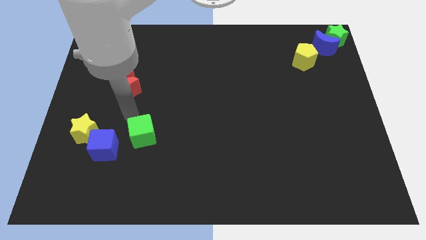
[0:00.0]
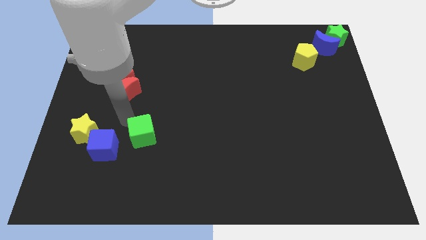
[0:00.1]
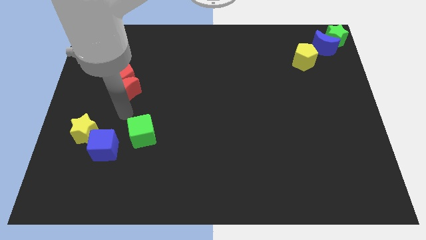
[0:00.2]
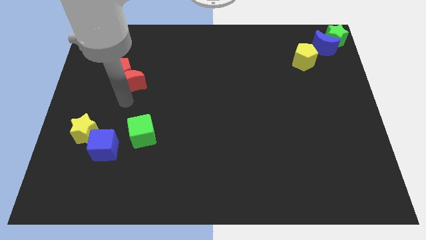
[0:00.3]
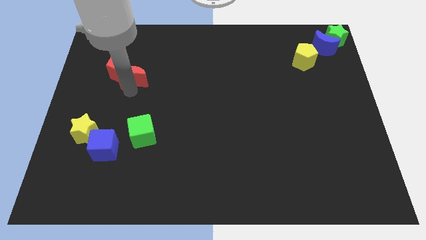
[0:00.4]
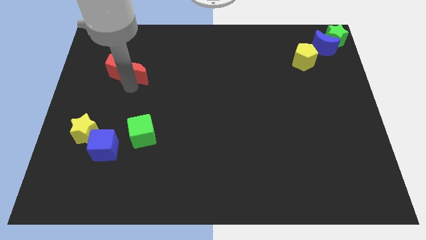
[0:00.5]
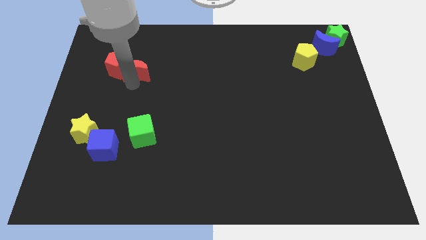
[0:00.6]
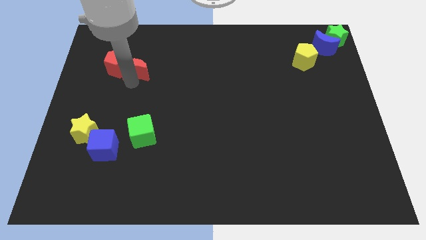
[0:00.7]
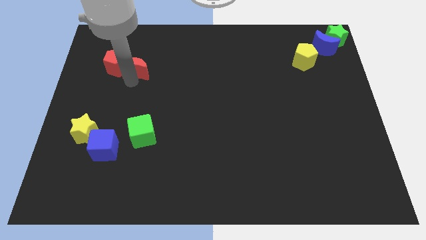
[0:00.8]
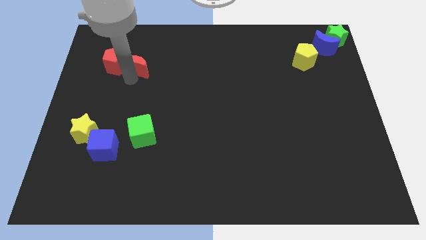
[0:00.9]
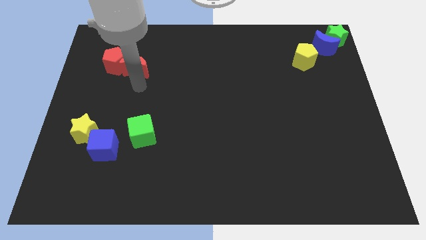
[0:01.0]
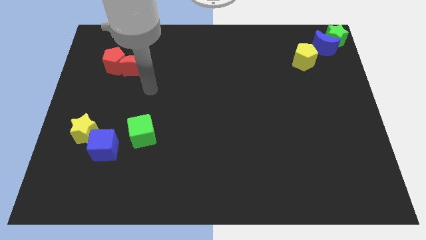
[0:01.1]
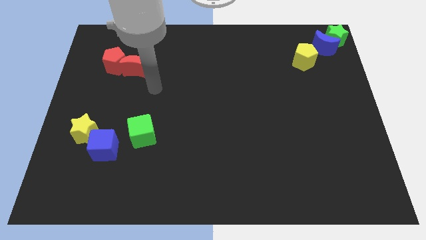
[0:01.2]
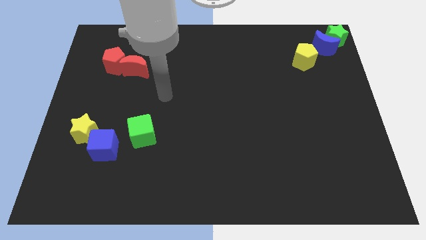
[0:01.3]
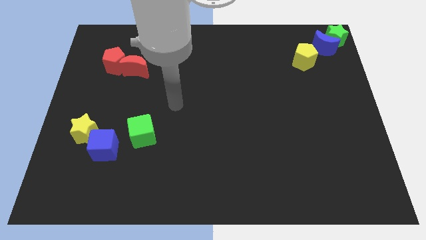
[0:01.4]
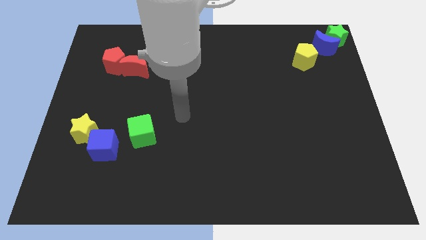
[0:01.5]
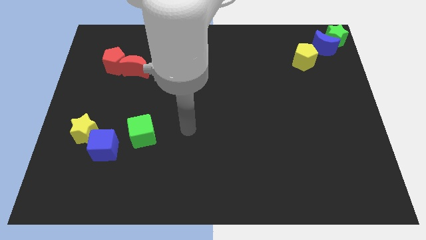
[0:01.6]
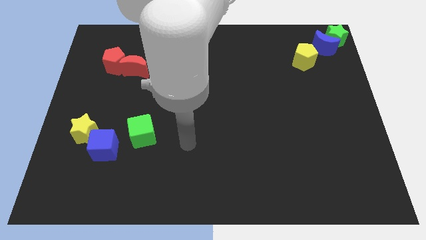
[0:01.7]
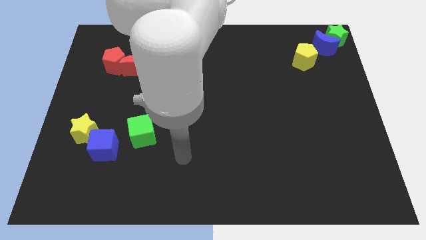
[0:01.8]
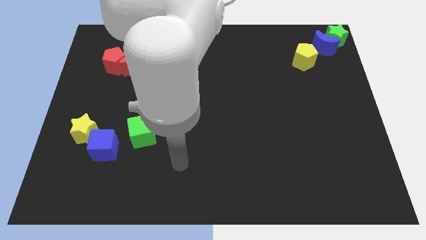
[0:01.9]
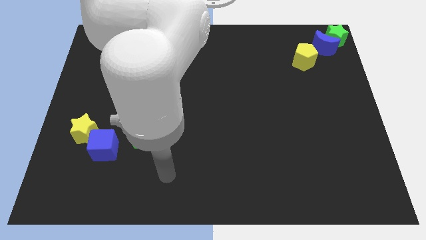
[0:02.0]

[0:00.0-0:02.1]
push the red moon into the red pentagon

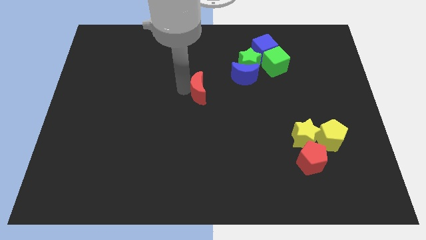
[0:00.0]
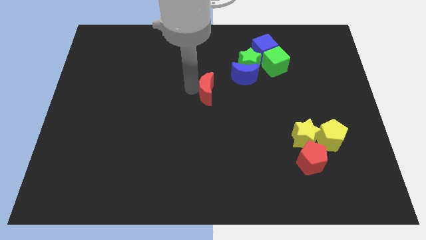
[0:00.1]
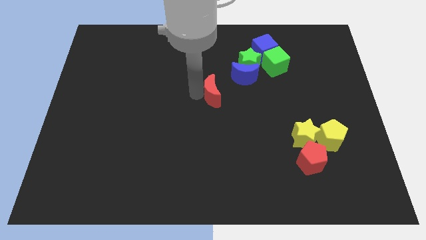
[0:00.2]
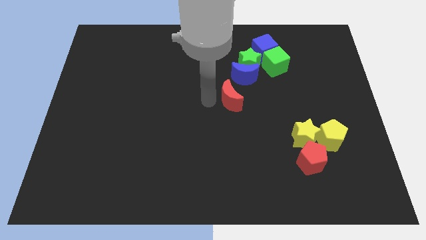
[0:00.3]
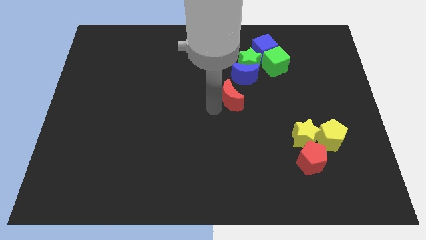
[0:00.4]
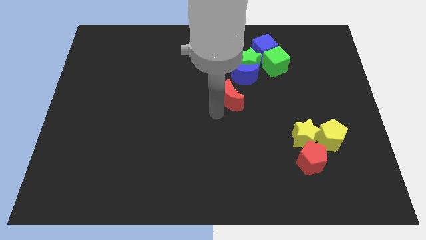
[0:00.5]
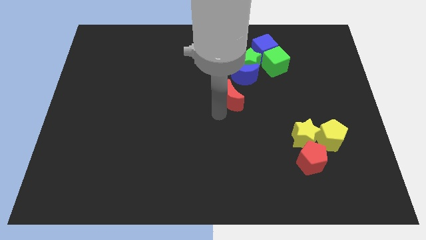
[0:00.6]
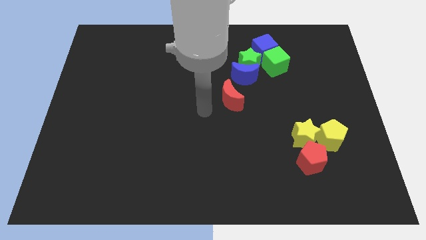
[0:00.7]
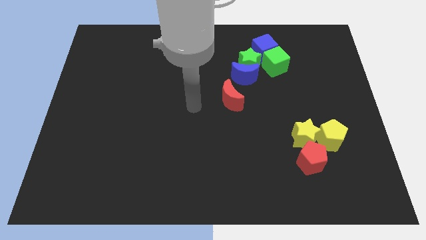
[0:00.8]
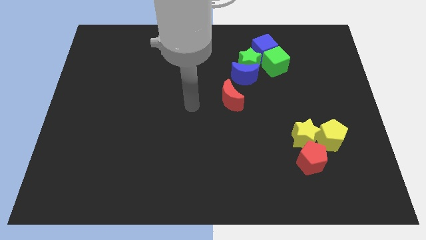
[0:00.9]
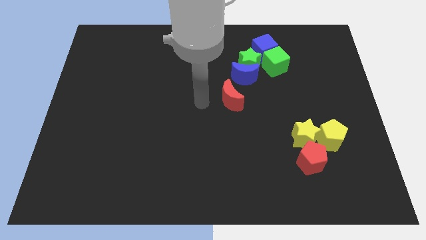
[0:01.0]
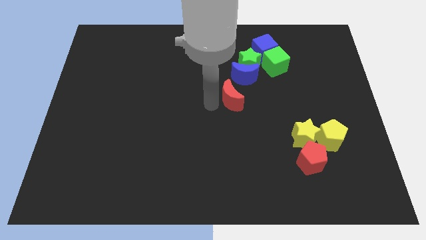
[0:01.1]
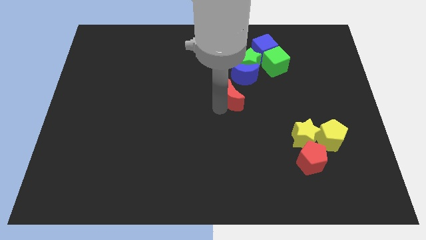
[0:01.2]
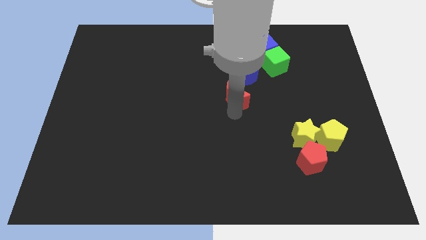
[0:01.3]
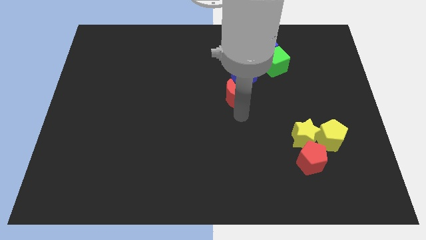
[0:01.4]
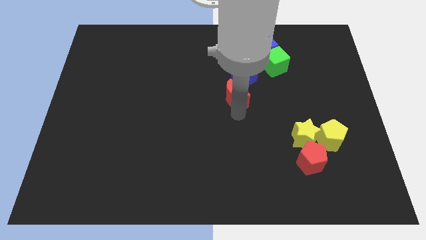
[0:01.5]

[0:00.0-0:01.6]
place red moon below blue moon

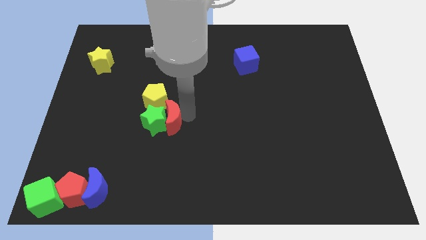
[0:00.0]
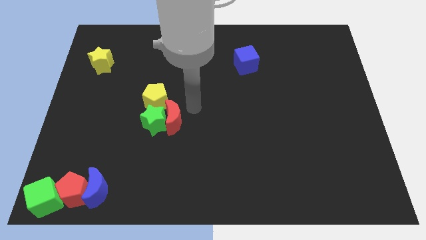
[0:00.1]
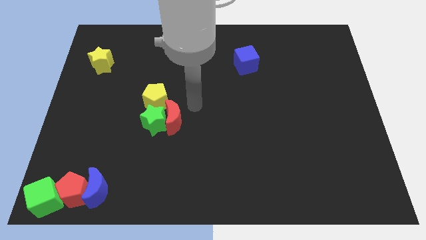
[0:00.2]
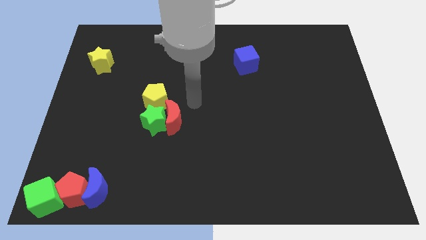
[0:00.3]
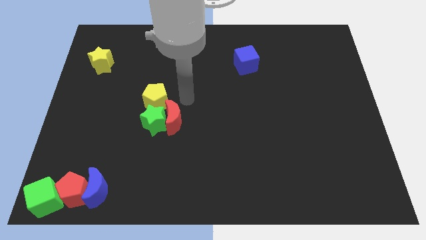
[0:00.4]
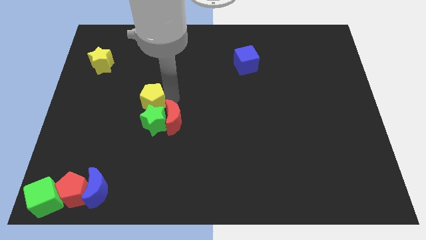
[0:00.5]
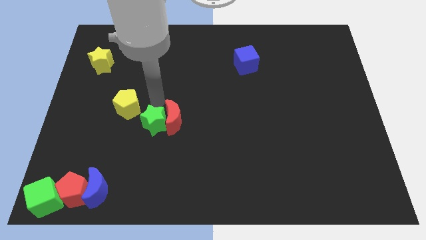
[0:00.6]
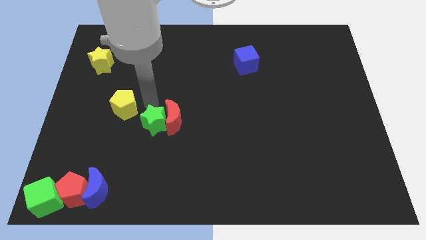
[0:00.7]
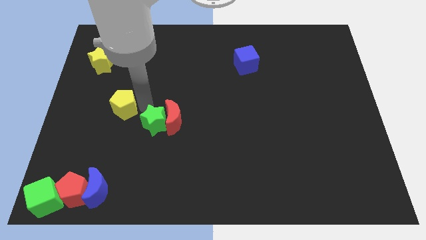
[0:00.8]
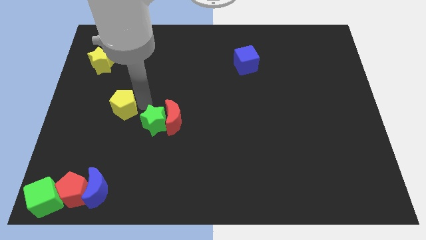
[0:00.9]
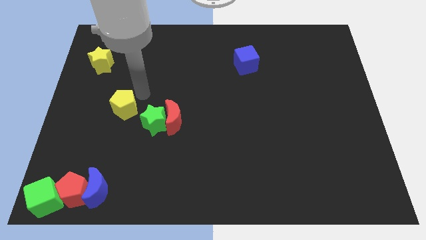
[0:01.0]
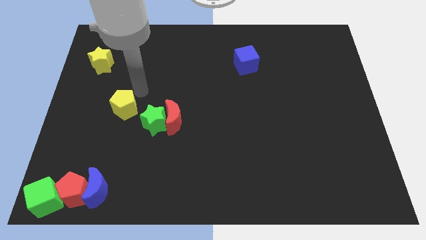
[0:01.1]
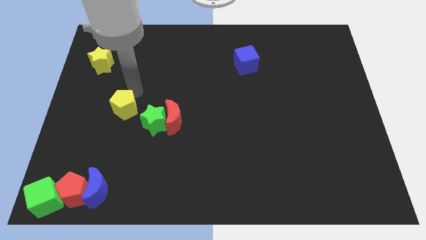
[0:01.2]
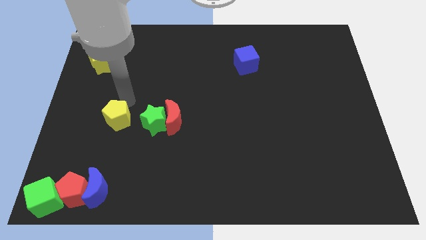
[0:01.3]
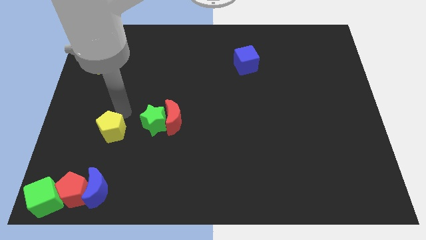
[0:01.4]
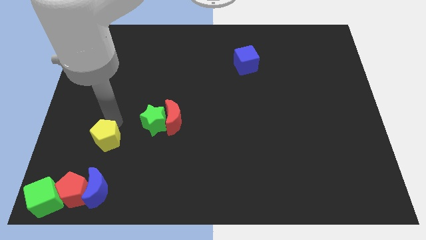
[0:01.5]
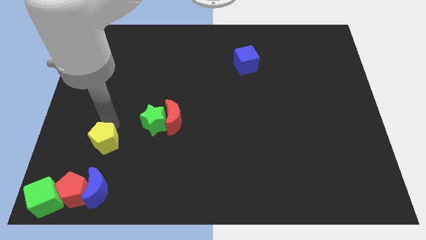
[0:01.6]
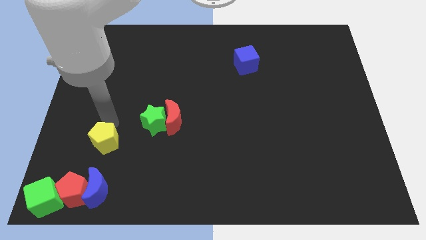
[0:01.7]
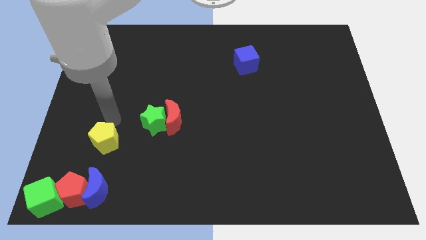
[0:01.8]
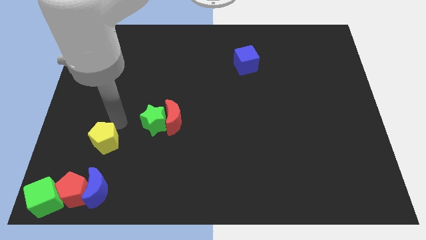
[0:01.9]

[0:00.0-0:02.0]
push yellow pentagon above blue crescent

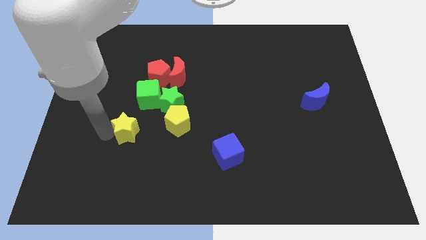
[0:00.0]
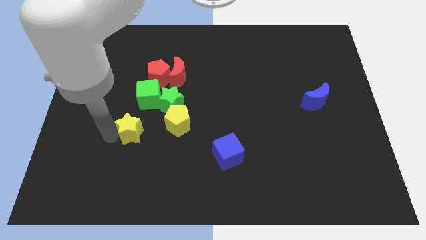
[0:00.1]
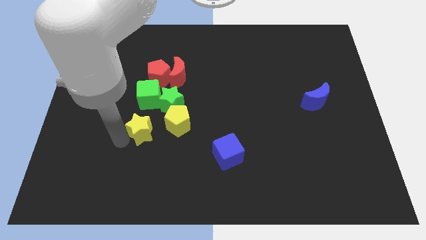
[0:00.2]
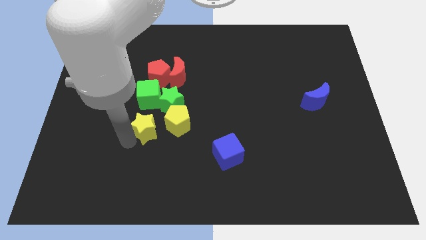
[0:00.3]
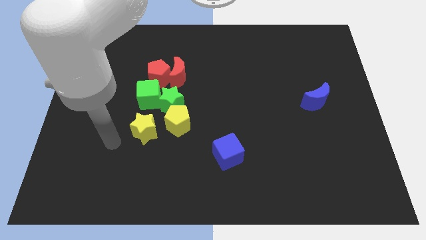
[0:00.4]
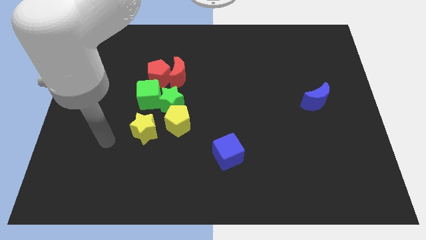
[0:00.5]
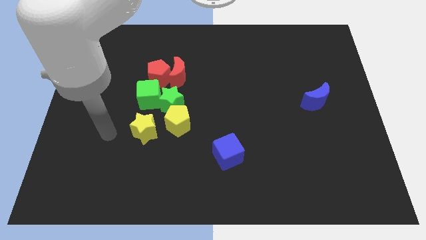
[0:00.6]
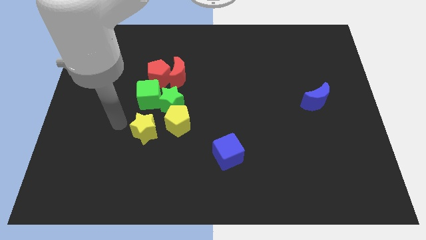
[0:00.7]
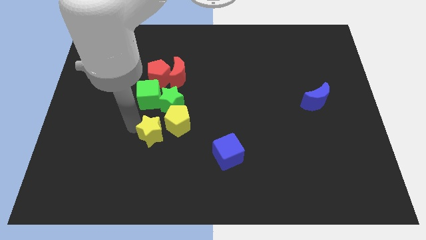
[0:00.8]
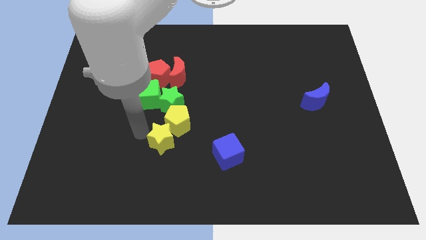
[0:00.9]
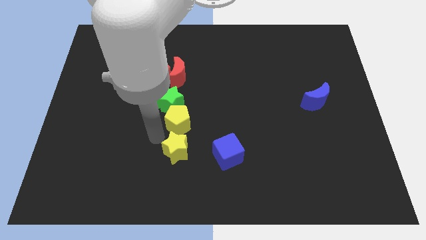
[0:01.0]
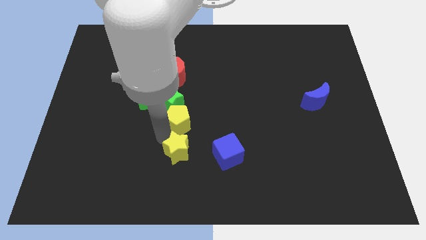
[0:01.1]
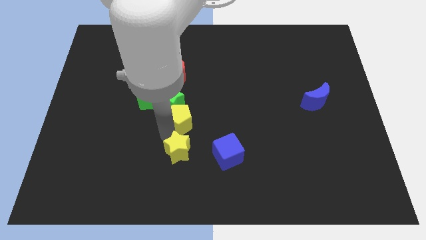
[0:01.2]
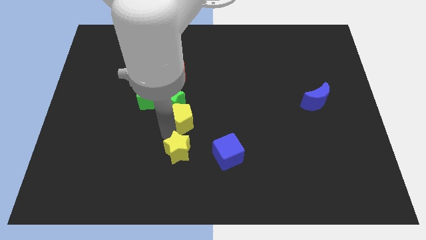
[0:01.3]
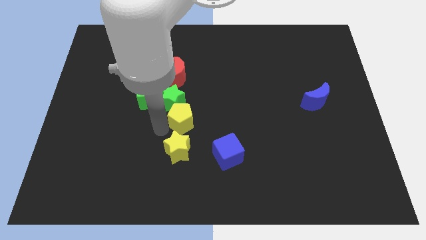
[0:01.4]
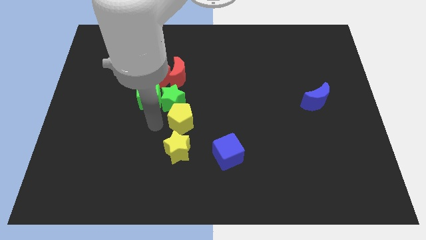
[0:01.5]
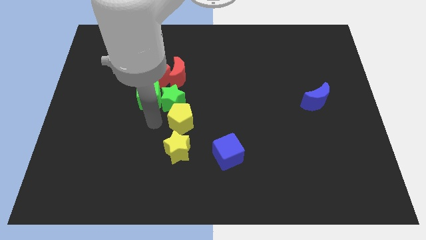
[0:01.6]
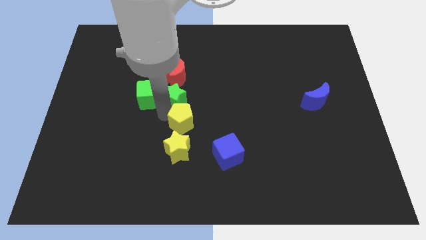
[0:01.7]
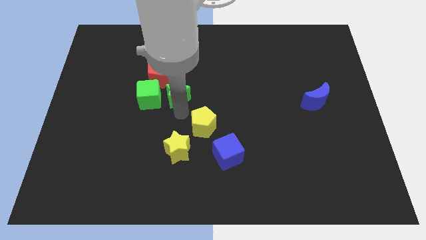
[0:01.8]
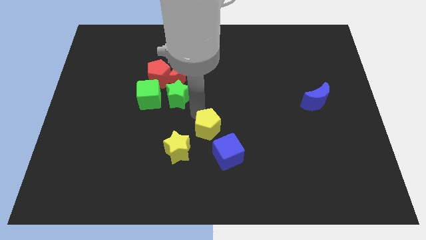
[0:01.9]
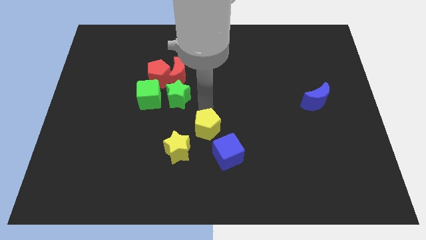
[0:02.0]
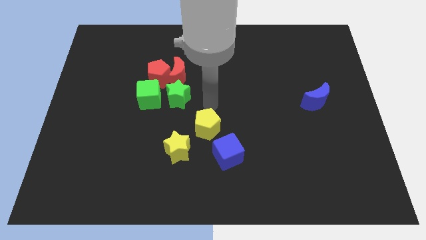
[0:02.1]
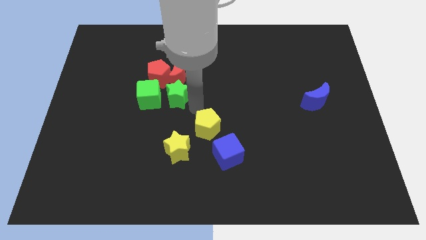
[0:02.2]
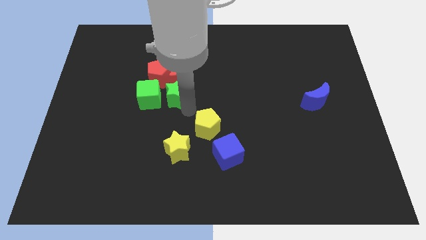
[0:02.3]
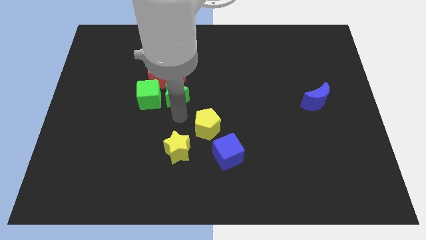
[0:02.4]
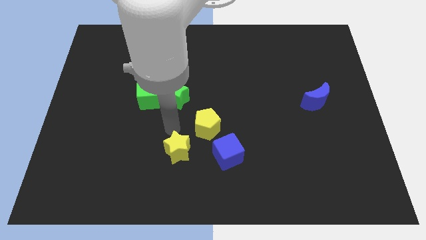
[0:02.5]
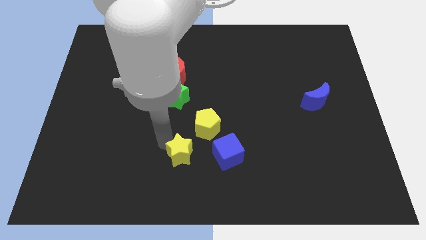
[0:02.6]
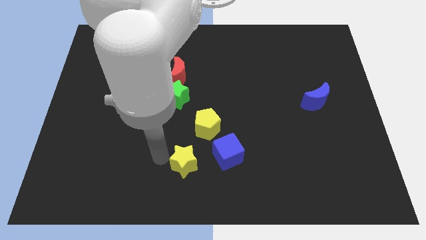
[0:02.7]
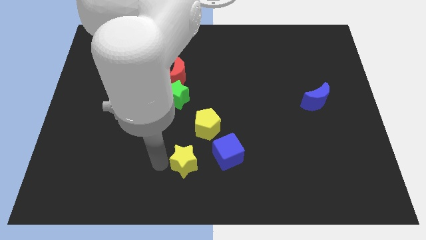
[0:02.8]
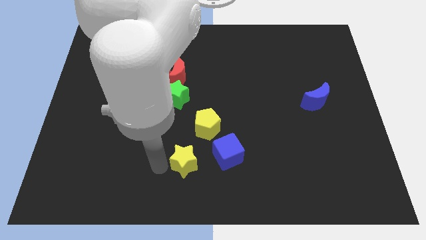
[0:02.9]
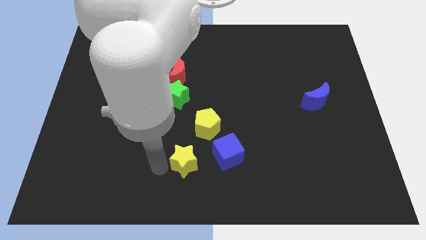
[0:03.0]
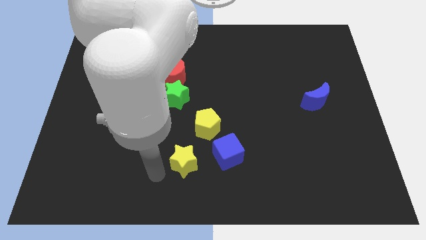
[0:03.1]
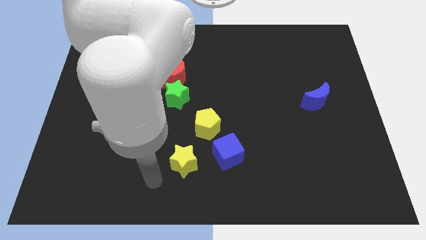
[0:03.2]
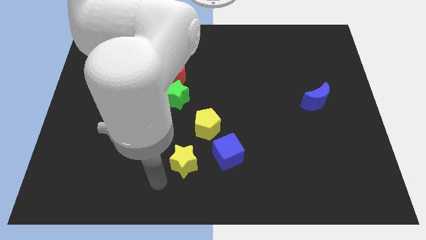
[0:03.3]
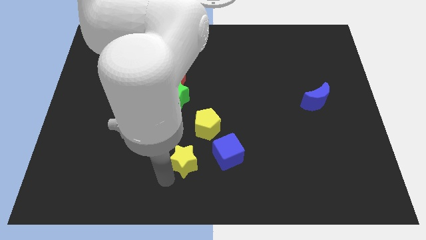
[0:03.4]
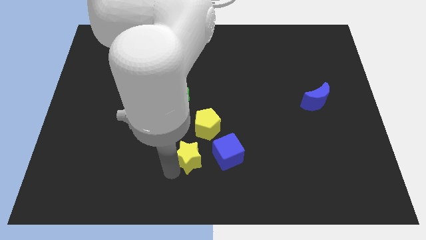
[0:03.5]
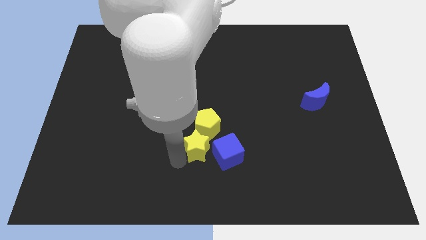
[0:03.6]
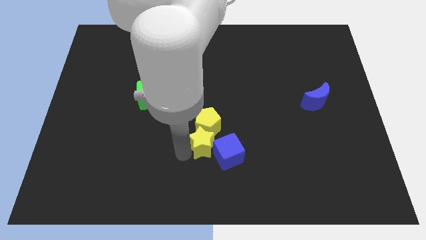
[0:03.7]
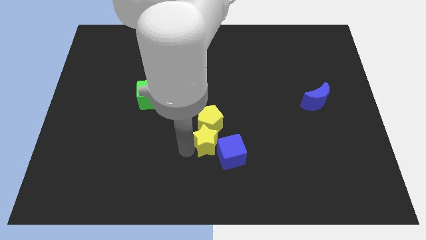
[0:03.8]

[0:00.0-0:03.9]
separate the yellow blocks from the green blocks
